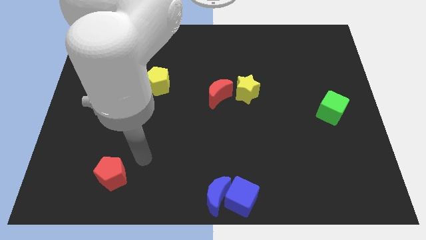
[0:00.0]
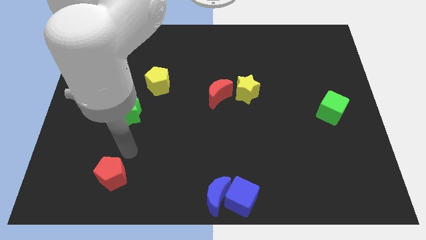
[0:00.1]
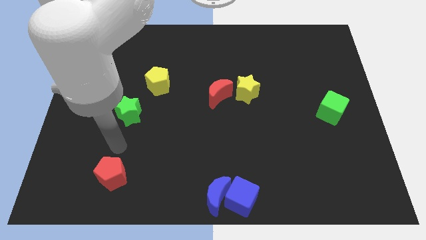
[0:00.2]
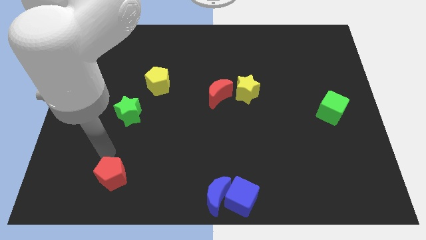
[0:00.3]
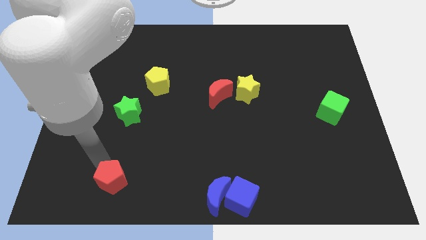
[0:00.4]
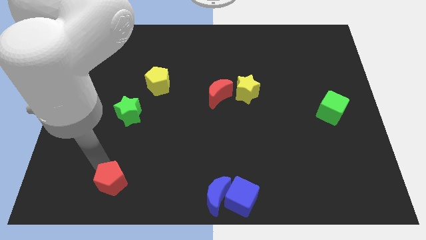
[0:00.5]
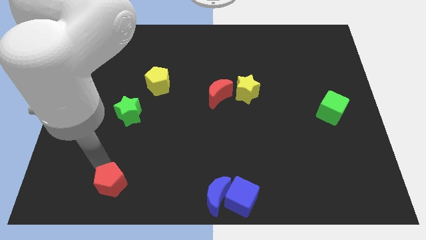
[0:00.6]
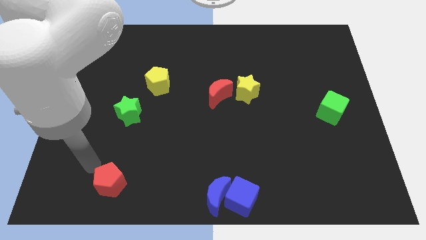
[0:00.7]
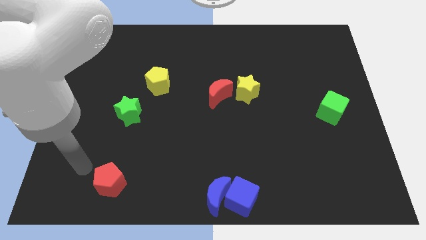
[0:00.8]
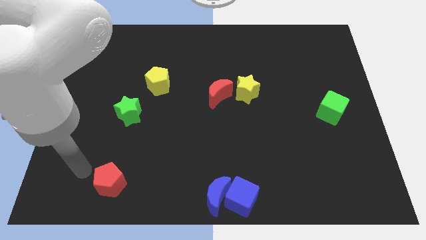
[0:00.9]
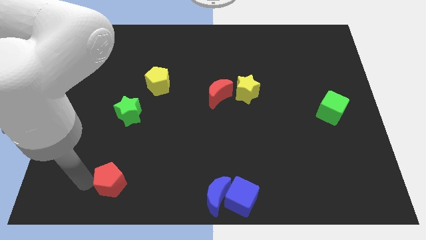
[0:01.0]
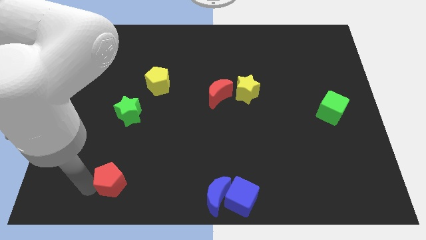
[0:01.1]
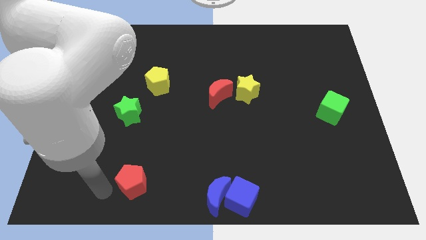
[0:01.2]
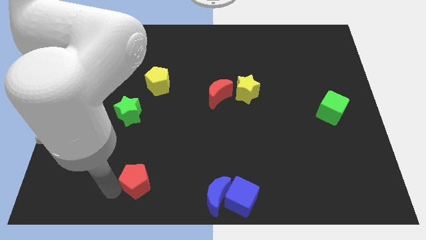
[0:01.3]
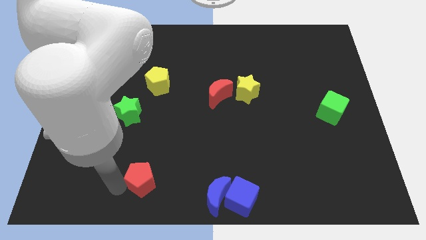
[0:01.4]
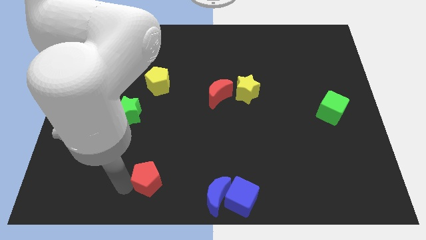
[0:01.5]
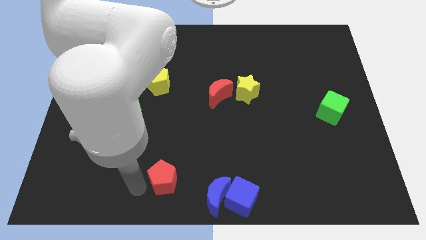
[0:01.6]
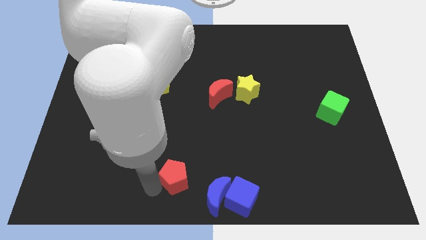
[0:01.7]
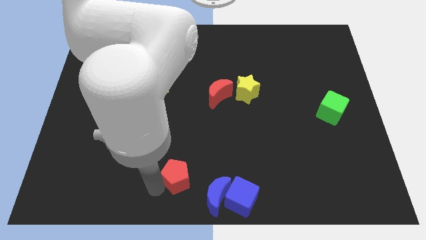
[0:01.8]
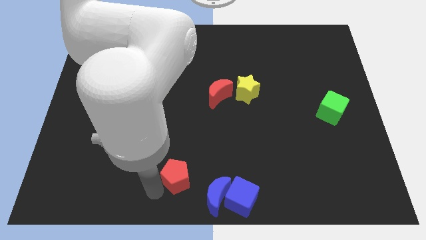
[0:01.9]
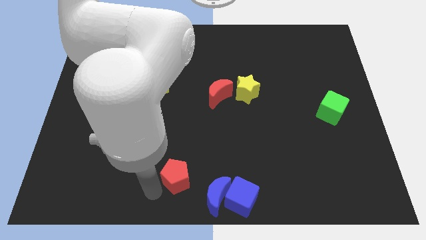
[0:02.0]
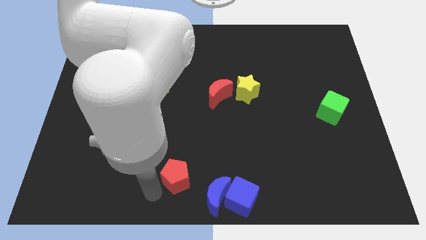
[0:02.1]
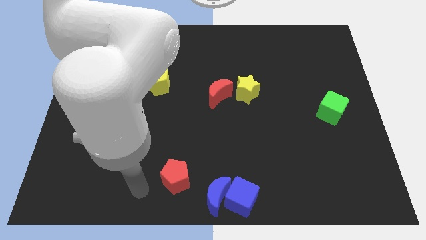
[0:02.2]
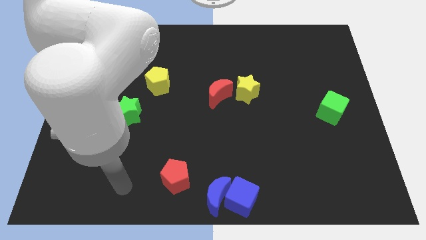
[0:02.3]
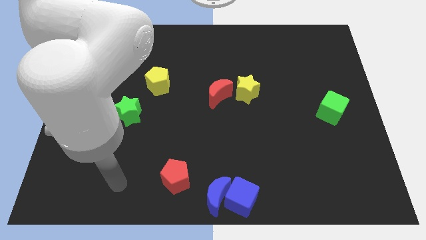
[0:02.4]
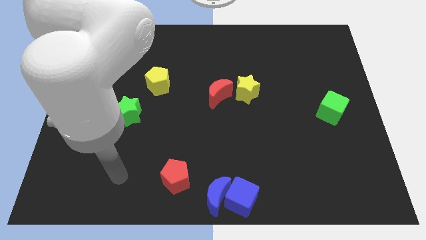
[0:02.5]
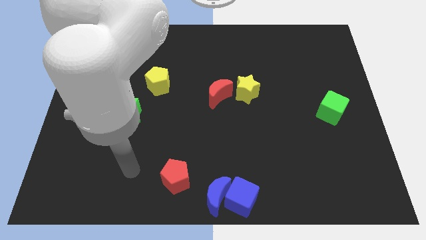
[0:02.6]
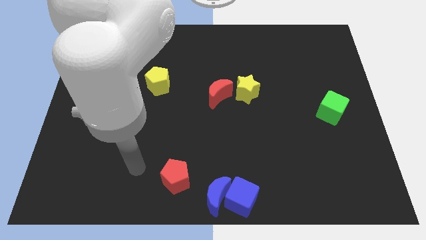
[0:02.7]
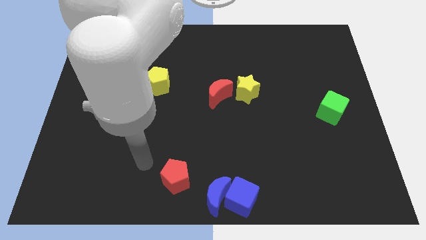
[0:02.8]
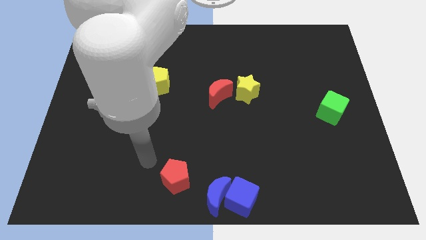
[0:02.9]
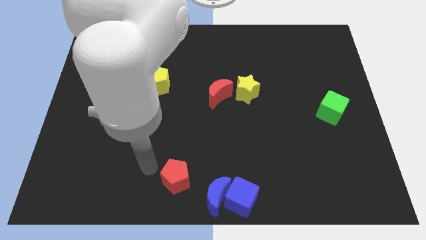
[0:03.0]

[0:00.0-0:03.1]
push red pentagon towards bottom center

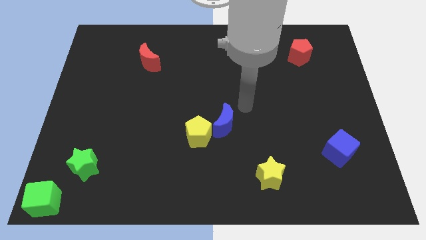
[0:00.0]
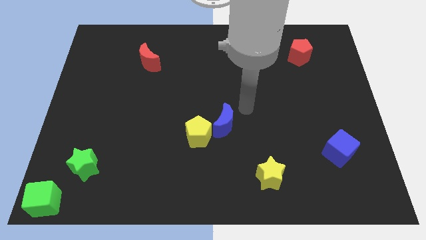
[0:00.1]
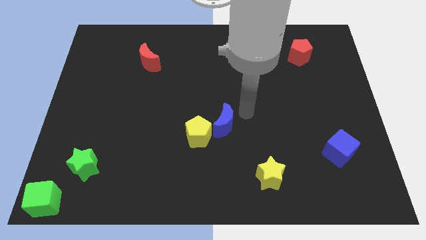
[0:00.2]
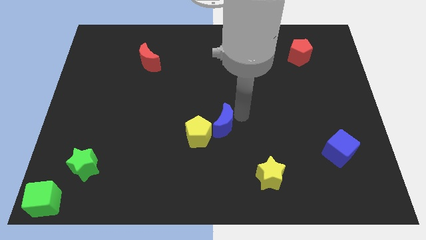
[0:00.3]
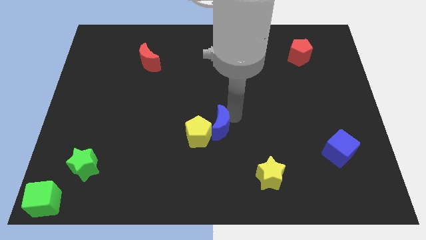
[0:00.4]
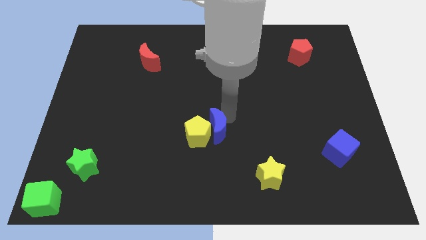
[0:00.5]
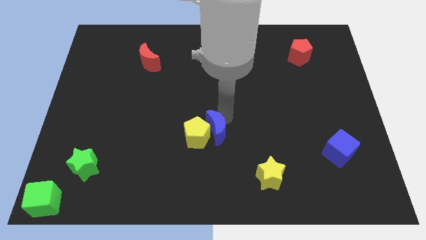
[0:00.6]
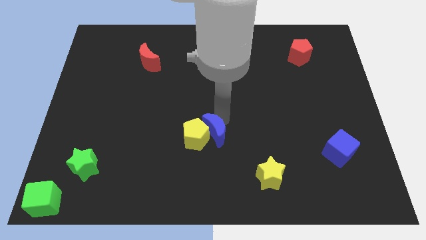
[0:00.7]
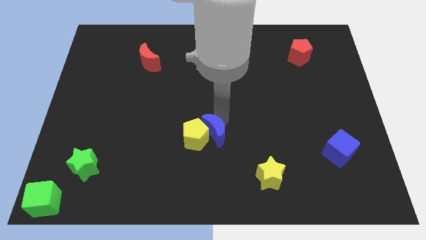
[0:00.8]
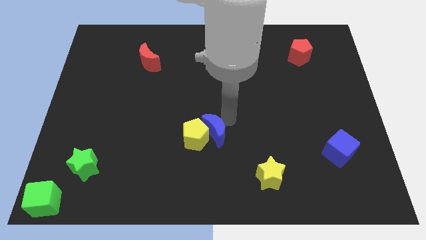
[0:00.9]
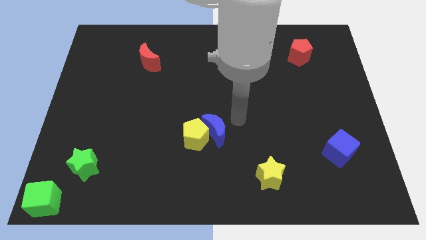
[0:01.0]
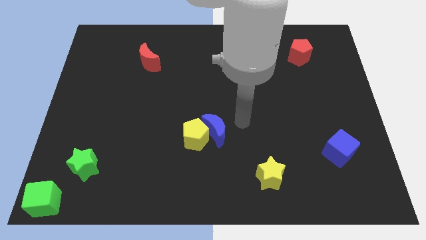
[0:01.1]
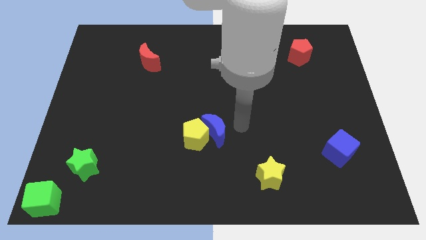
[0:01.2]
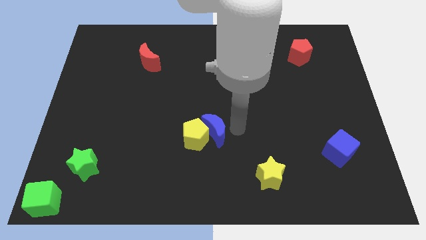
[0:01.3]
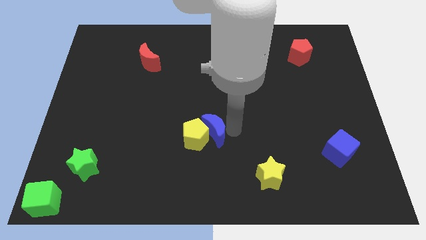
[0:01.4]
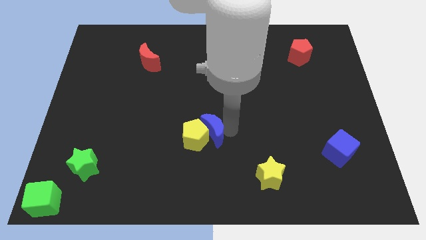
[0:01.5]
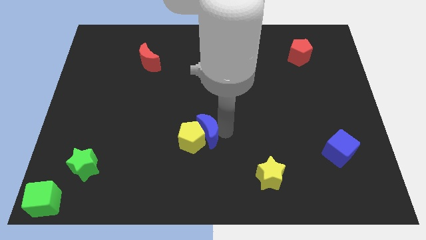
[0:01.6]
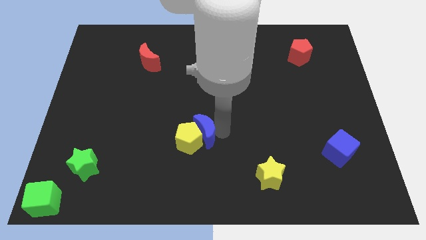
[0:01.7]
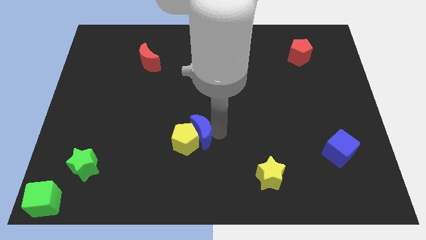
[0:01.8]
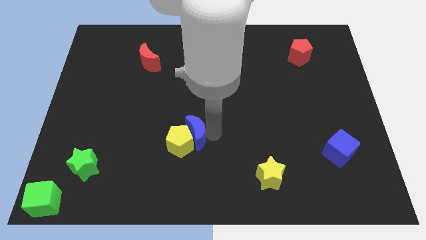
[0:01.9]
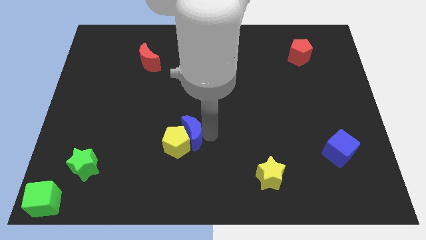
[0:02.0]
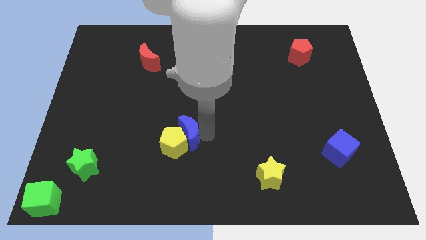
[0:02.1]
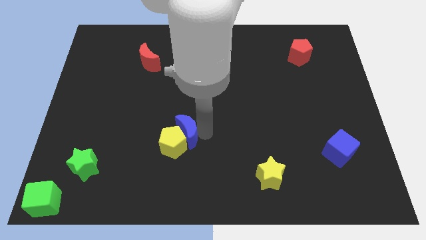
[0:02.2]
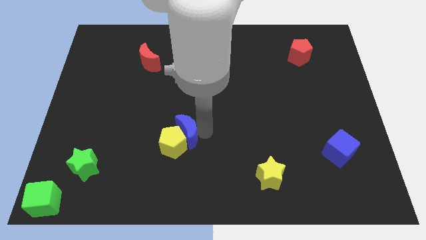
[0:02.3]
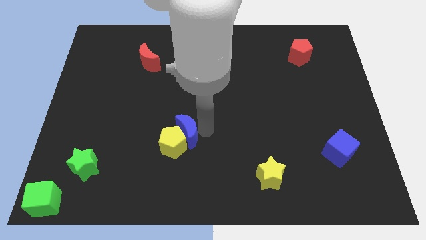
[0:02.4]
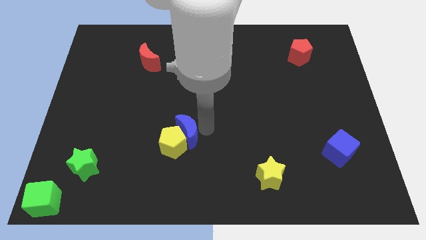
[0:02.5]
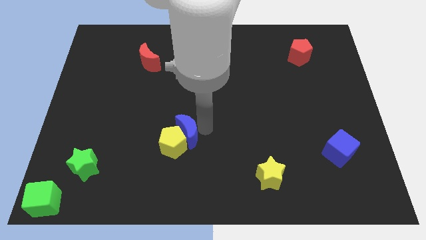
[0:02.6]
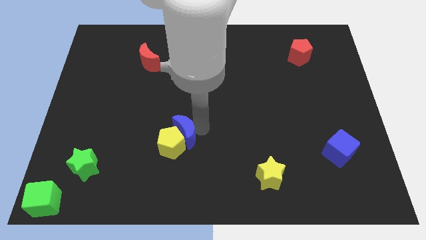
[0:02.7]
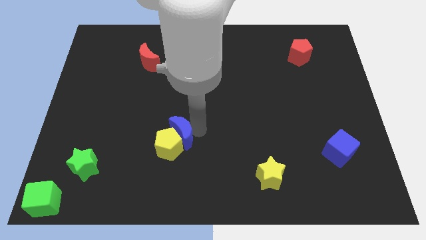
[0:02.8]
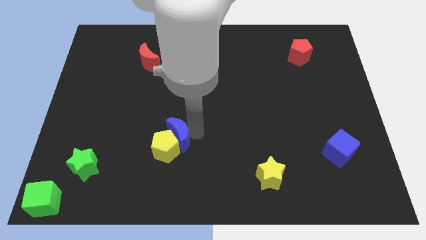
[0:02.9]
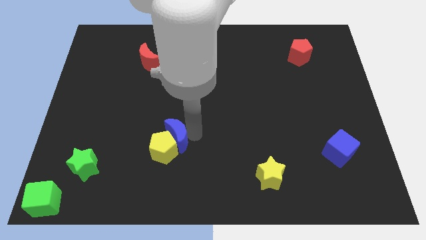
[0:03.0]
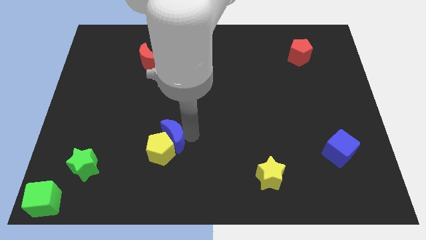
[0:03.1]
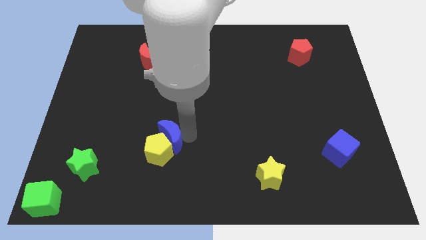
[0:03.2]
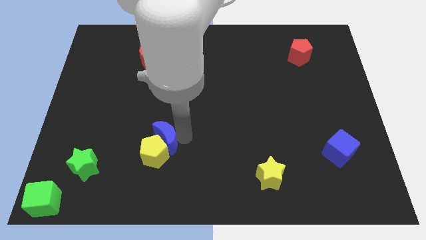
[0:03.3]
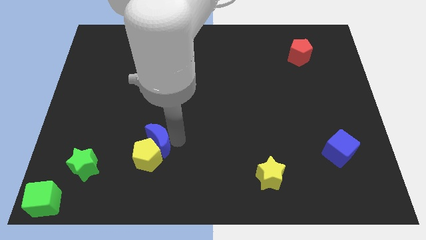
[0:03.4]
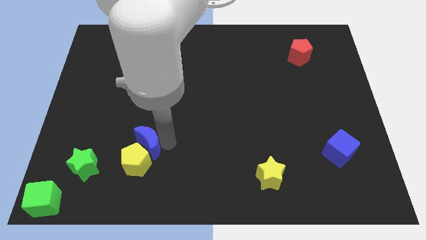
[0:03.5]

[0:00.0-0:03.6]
push the blue moon to the vertical bottom side of the red moon

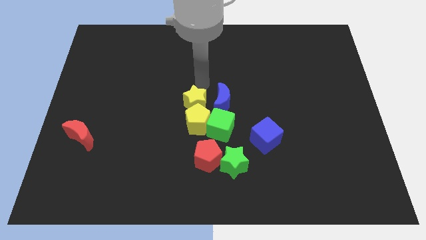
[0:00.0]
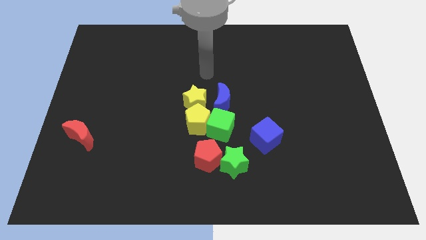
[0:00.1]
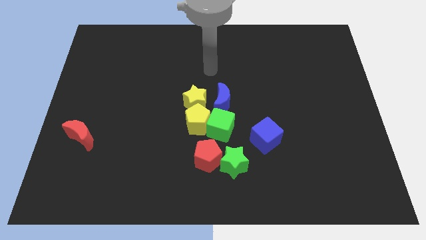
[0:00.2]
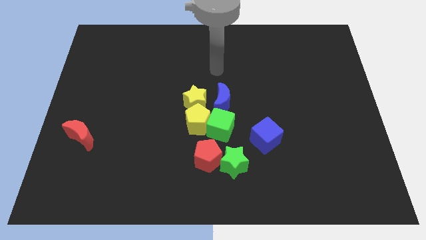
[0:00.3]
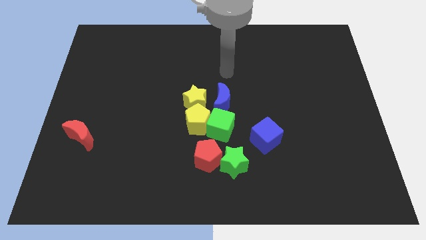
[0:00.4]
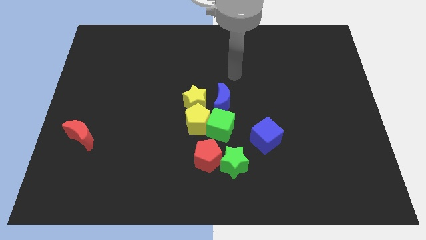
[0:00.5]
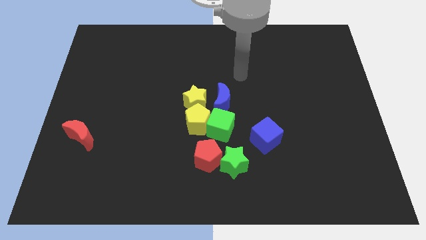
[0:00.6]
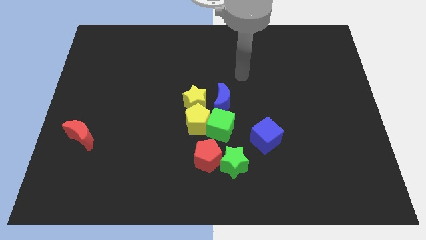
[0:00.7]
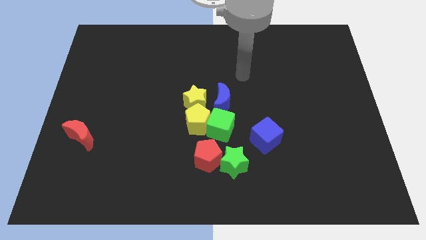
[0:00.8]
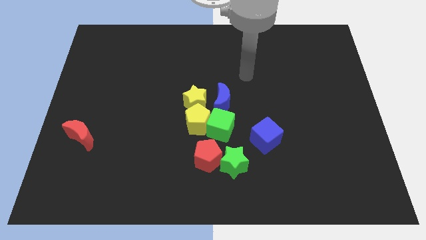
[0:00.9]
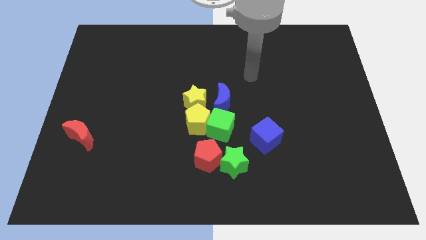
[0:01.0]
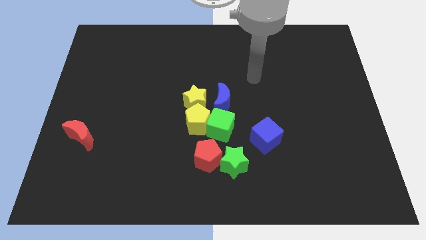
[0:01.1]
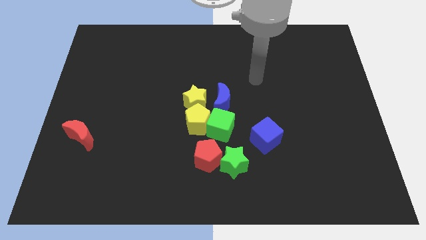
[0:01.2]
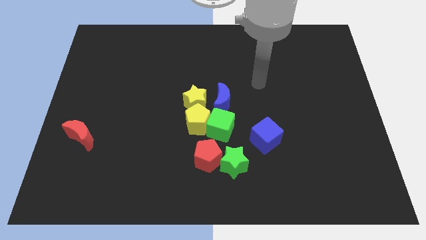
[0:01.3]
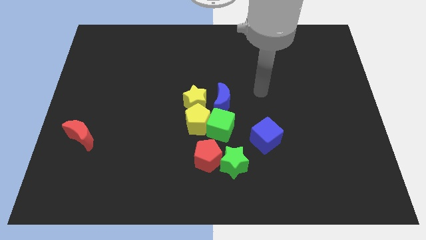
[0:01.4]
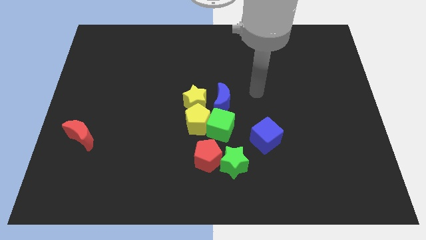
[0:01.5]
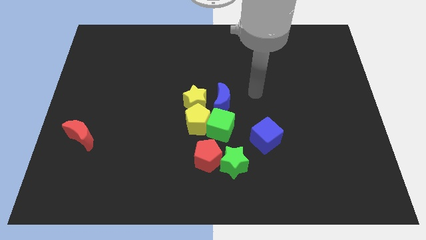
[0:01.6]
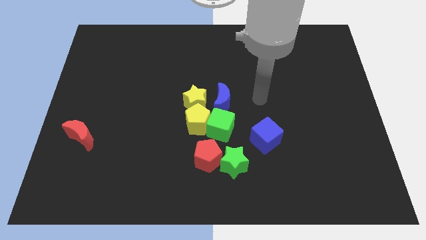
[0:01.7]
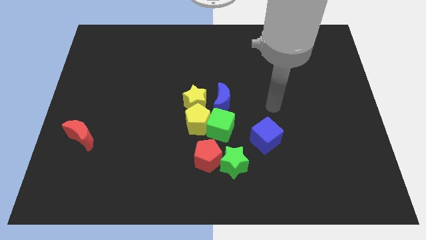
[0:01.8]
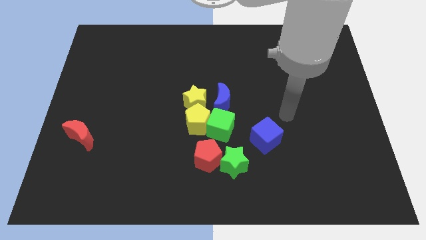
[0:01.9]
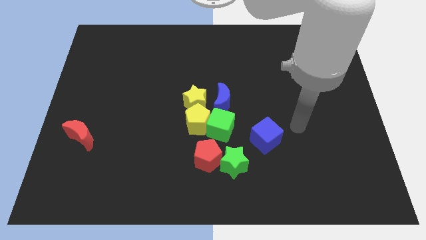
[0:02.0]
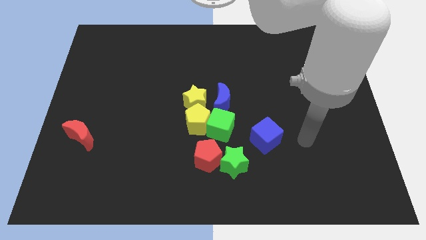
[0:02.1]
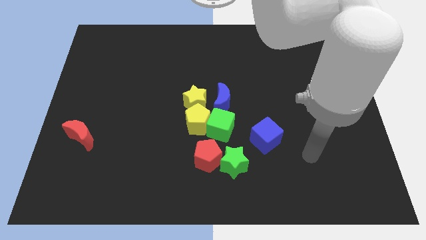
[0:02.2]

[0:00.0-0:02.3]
point your arm at the right of the blue cube

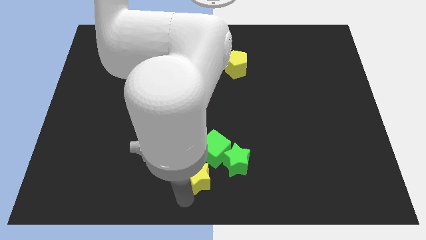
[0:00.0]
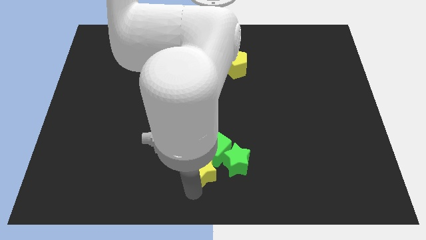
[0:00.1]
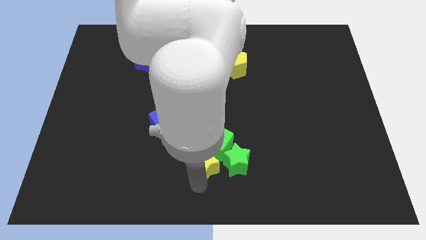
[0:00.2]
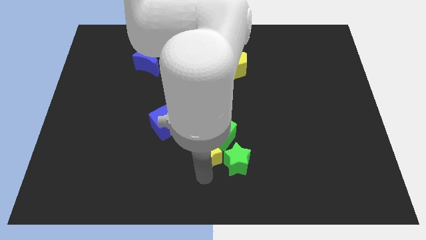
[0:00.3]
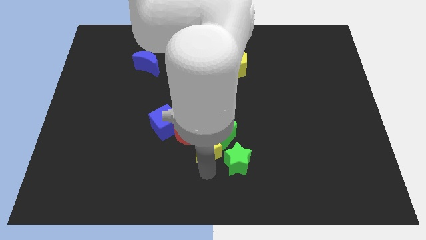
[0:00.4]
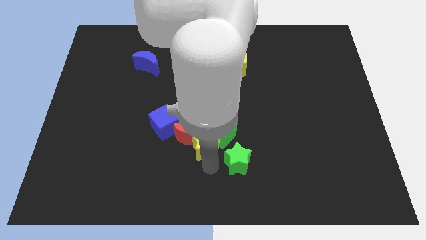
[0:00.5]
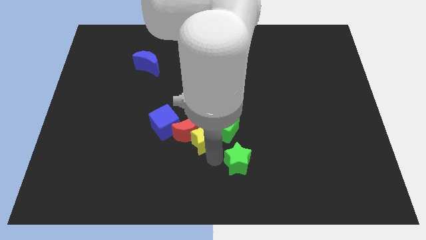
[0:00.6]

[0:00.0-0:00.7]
push the yellow star into the green cube
